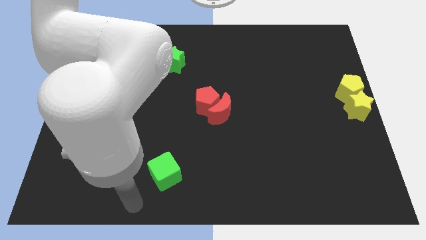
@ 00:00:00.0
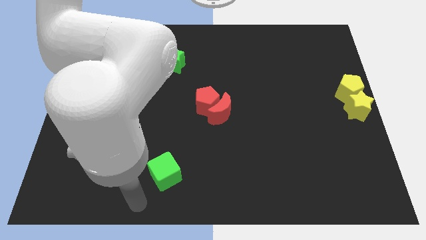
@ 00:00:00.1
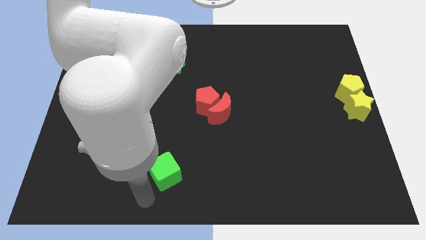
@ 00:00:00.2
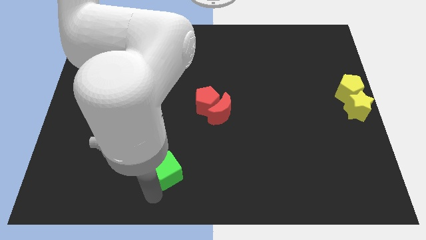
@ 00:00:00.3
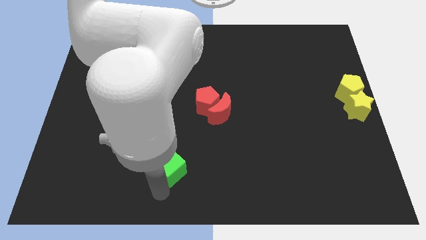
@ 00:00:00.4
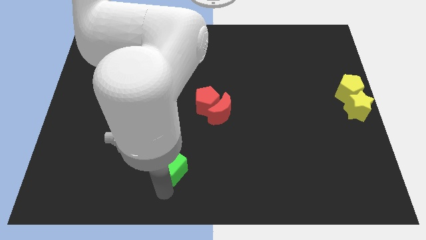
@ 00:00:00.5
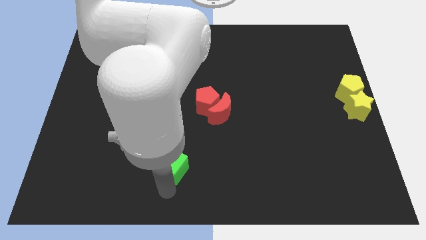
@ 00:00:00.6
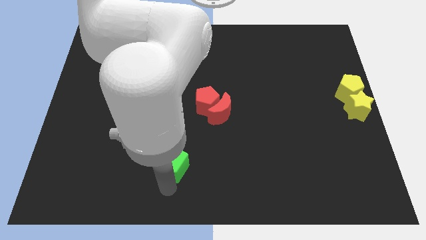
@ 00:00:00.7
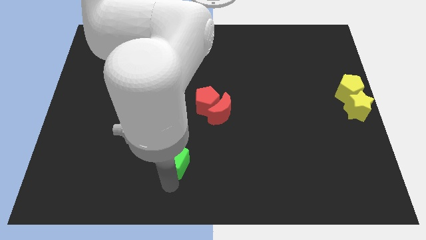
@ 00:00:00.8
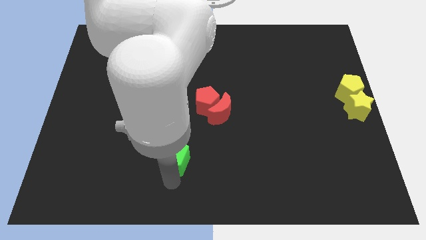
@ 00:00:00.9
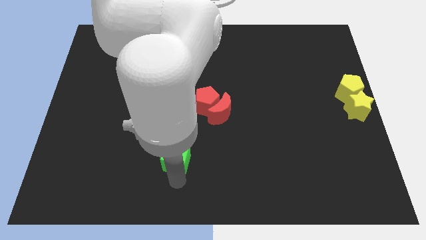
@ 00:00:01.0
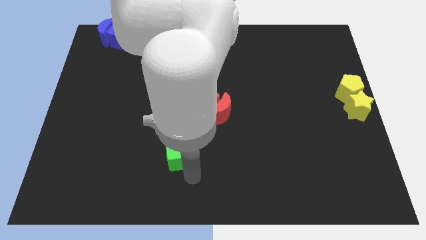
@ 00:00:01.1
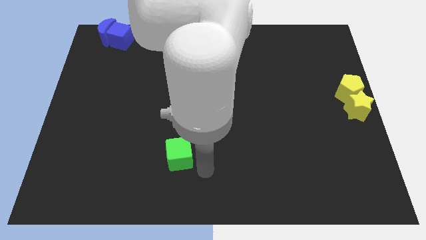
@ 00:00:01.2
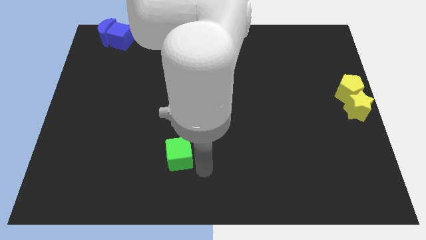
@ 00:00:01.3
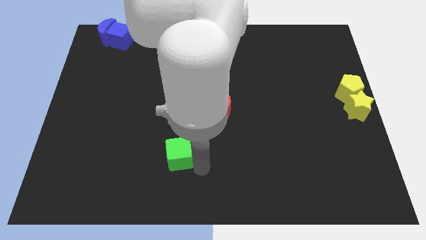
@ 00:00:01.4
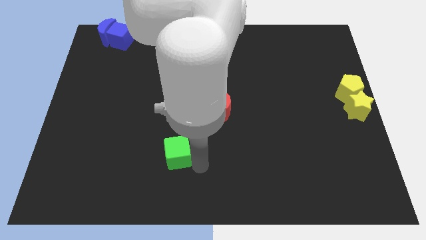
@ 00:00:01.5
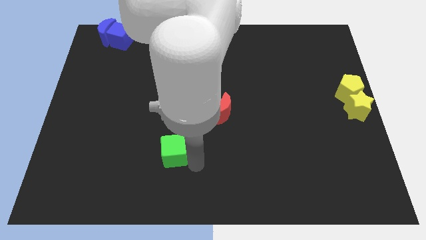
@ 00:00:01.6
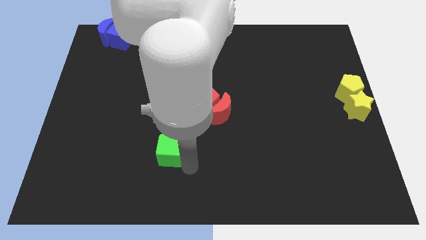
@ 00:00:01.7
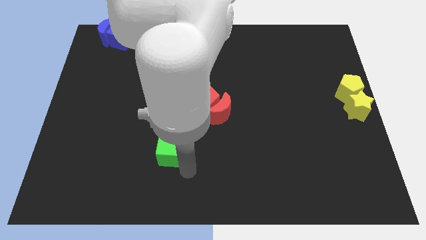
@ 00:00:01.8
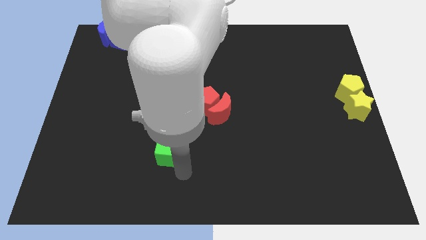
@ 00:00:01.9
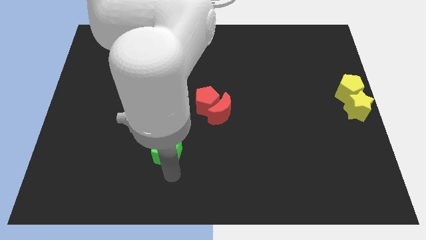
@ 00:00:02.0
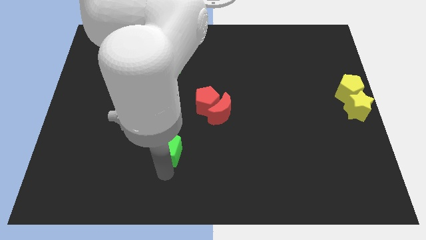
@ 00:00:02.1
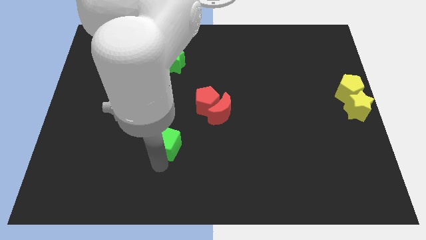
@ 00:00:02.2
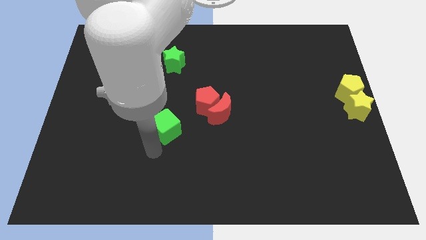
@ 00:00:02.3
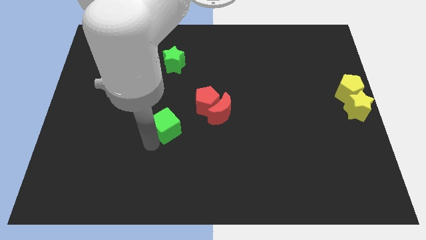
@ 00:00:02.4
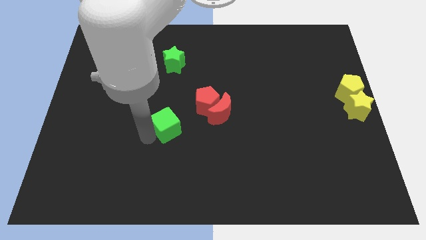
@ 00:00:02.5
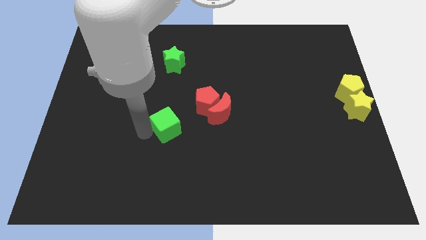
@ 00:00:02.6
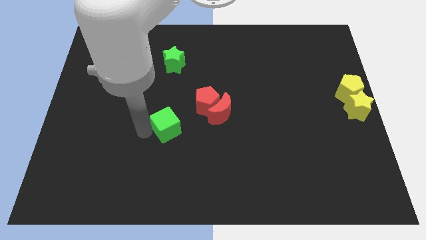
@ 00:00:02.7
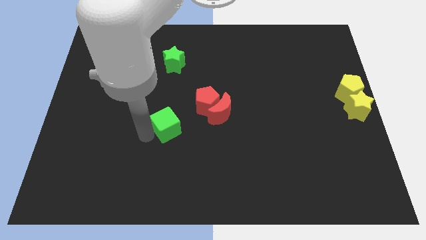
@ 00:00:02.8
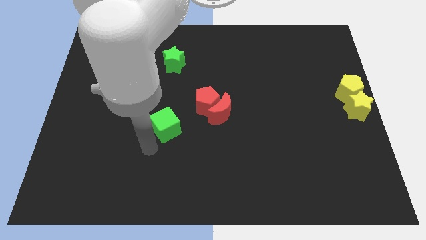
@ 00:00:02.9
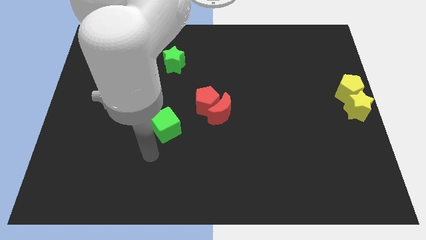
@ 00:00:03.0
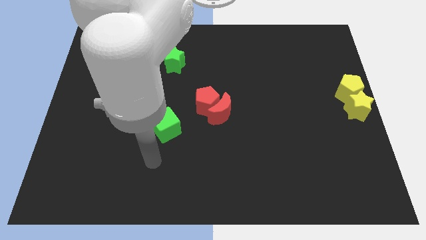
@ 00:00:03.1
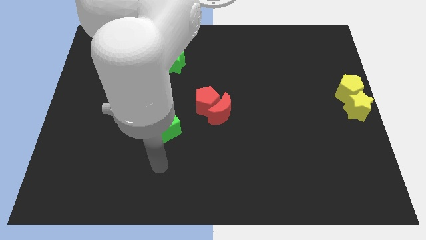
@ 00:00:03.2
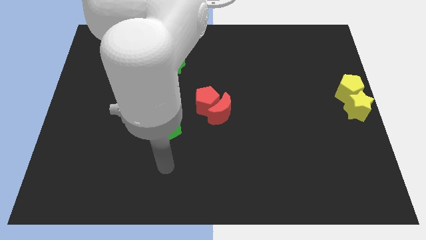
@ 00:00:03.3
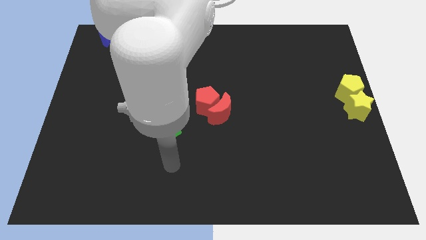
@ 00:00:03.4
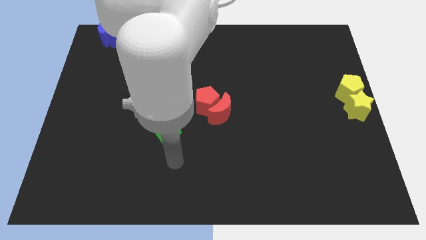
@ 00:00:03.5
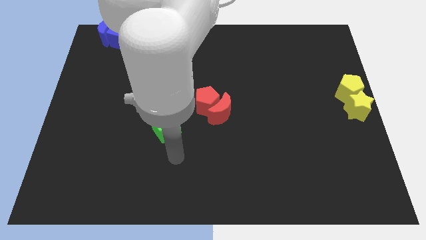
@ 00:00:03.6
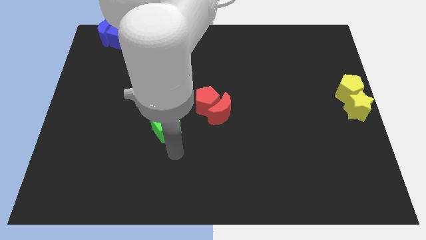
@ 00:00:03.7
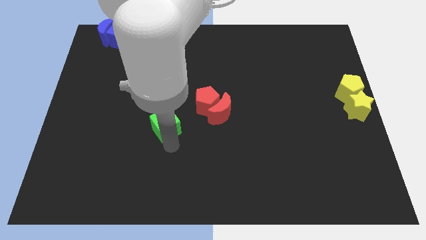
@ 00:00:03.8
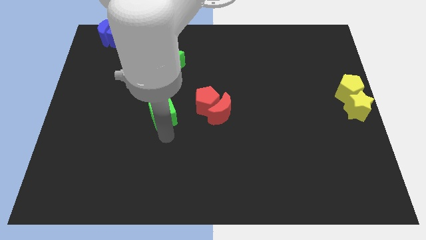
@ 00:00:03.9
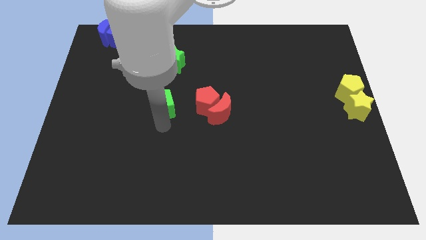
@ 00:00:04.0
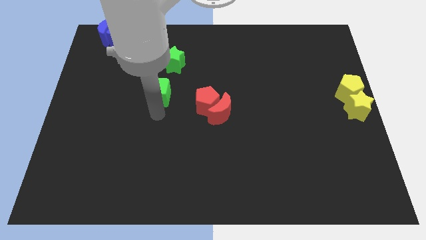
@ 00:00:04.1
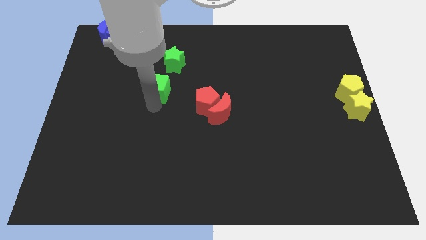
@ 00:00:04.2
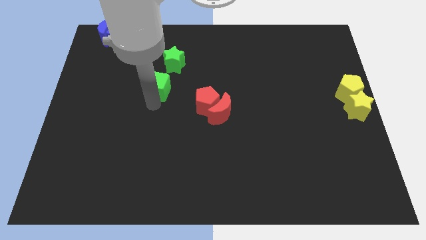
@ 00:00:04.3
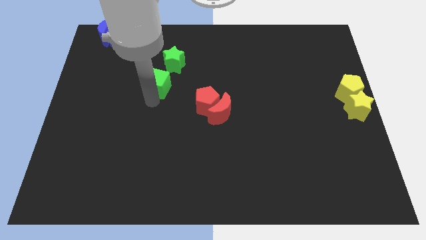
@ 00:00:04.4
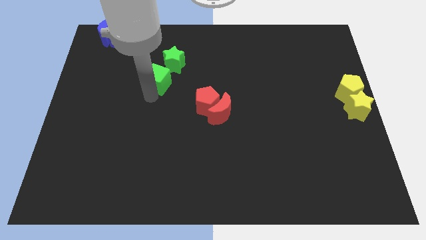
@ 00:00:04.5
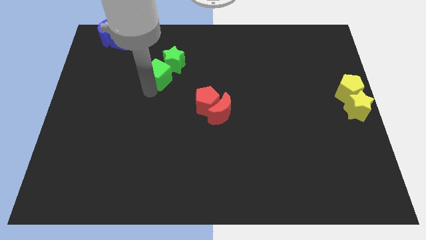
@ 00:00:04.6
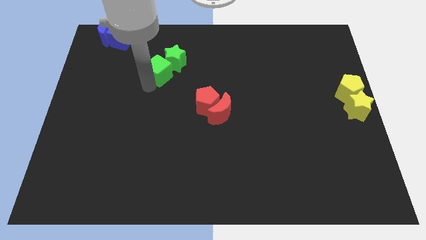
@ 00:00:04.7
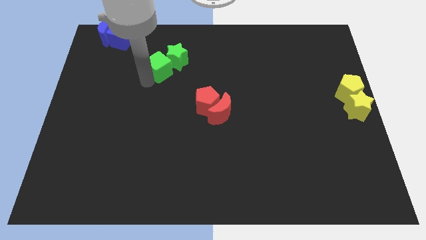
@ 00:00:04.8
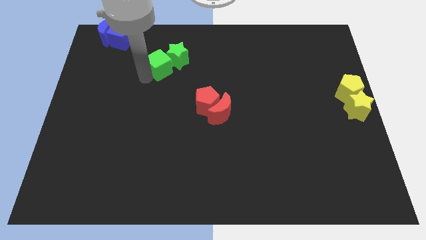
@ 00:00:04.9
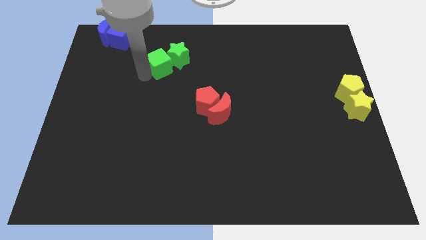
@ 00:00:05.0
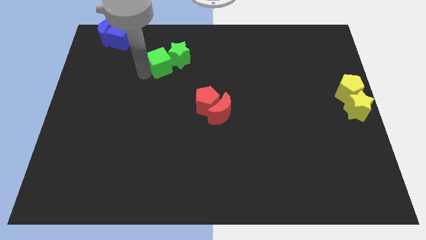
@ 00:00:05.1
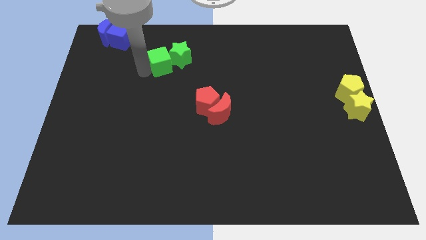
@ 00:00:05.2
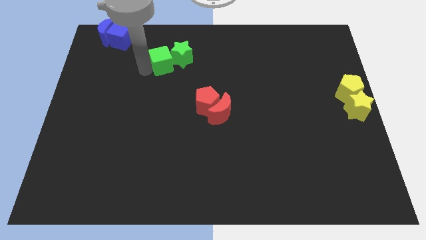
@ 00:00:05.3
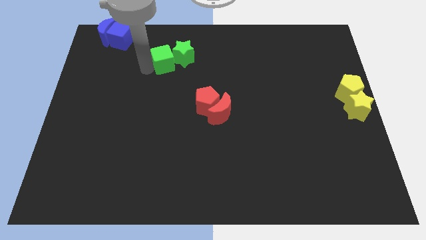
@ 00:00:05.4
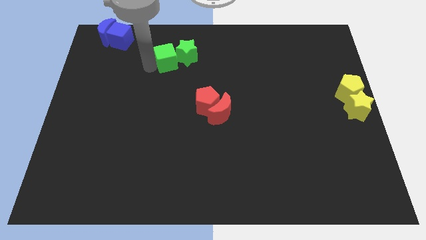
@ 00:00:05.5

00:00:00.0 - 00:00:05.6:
move the green cube left to the green star

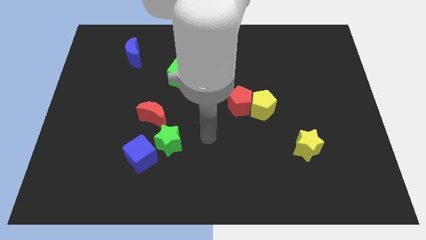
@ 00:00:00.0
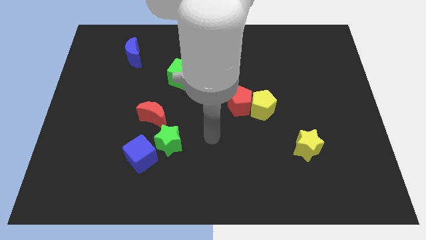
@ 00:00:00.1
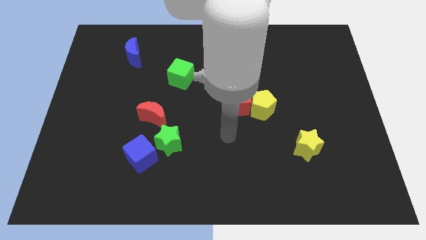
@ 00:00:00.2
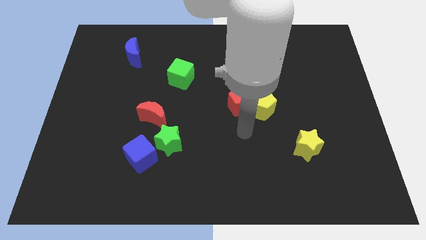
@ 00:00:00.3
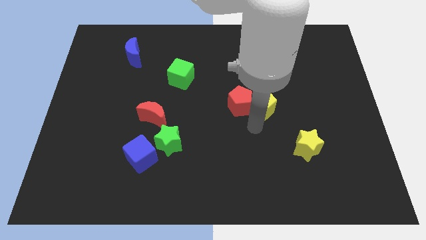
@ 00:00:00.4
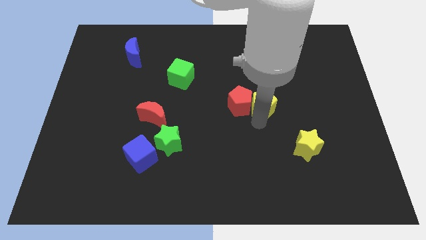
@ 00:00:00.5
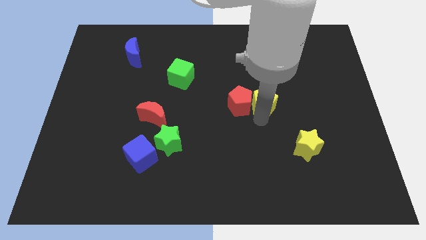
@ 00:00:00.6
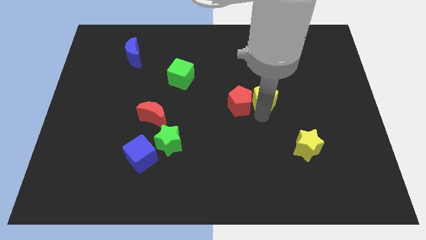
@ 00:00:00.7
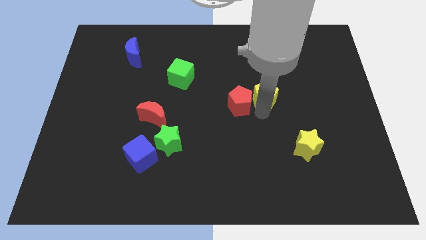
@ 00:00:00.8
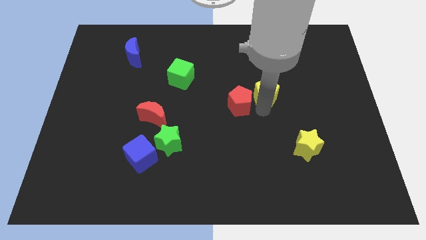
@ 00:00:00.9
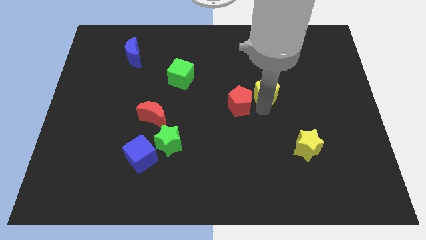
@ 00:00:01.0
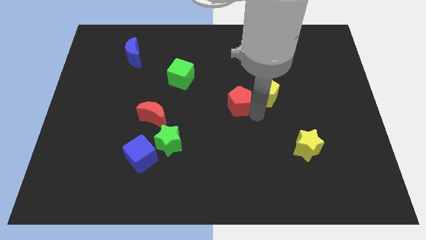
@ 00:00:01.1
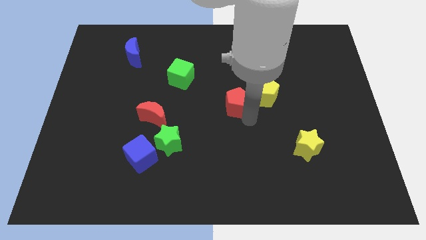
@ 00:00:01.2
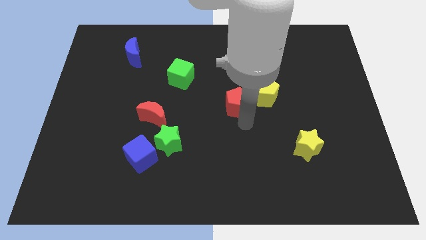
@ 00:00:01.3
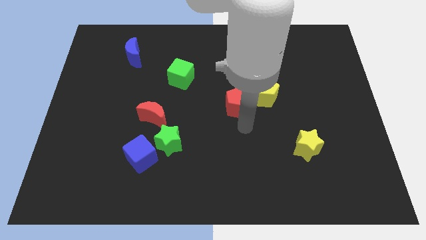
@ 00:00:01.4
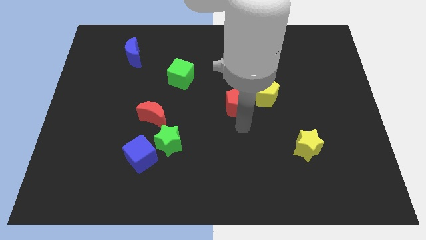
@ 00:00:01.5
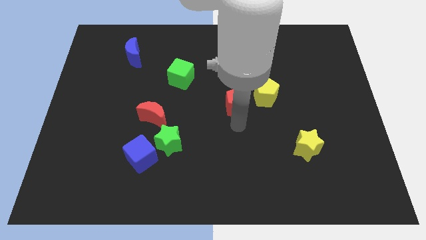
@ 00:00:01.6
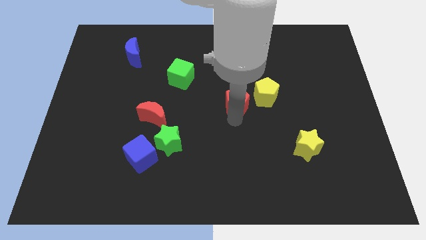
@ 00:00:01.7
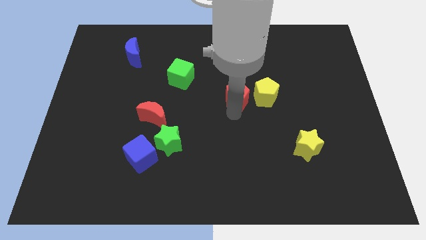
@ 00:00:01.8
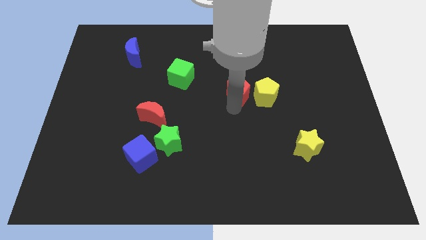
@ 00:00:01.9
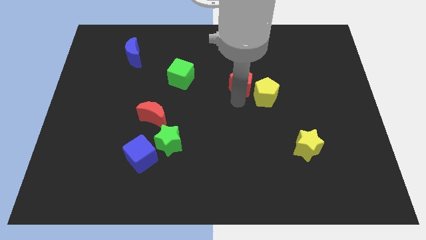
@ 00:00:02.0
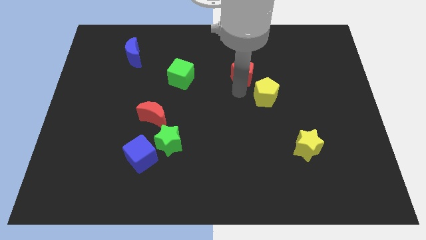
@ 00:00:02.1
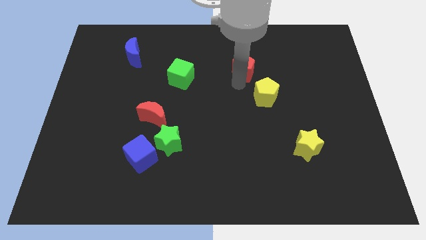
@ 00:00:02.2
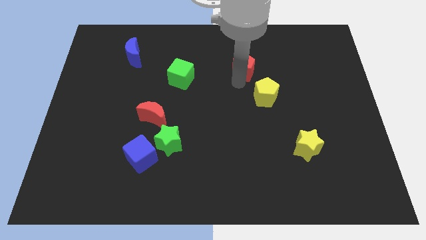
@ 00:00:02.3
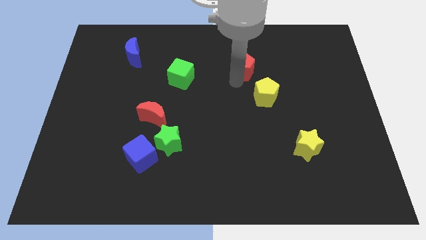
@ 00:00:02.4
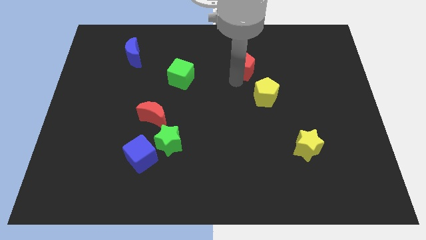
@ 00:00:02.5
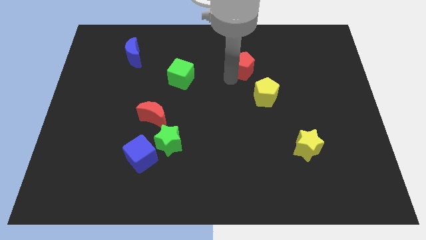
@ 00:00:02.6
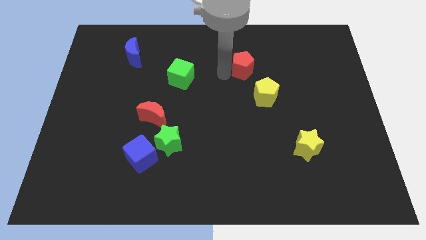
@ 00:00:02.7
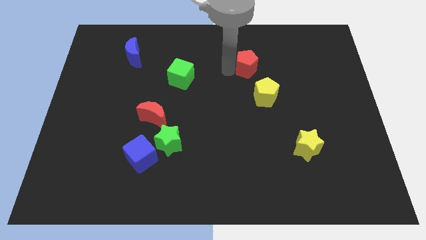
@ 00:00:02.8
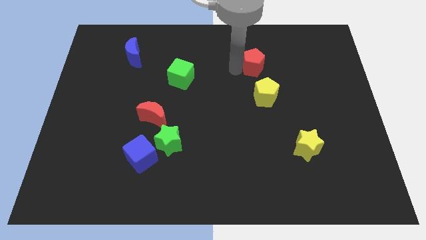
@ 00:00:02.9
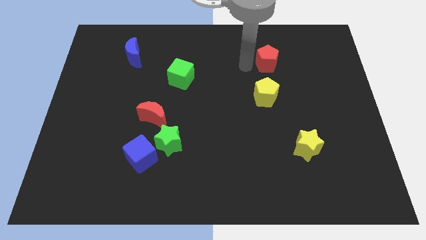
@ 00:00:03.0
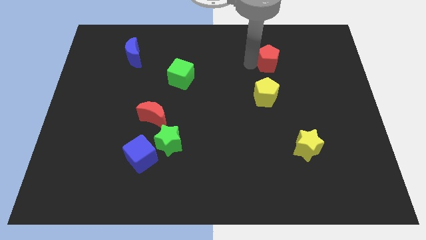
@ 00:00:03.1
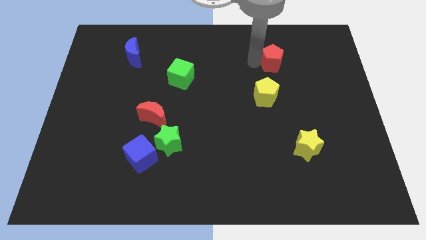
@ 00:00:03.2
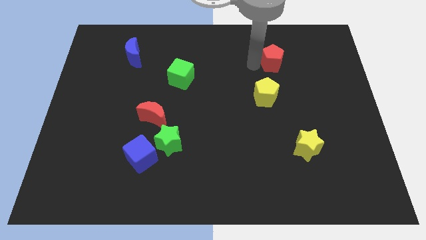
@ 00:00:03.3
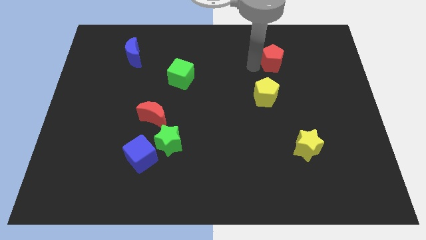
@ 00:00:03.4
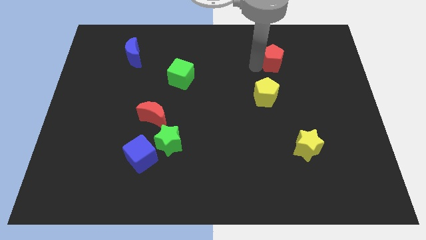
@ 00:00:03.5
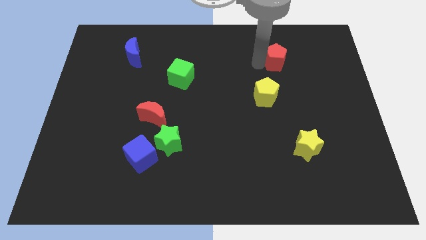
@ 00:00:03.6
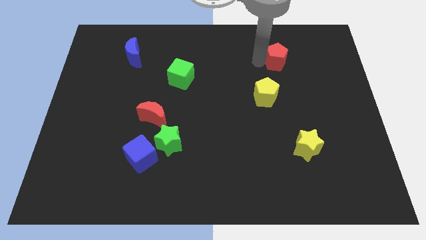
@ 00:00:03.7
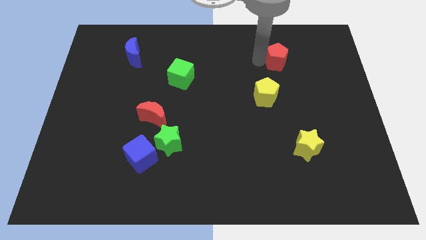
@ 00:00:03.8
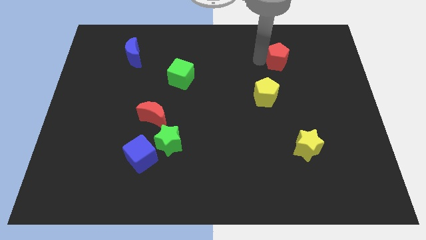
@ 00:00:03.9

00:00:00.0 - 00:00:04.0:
move your arm close to the red pentagon
